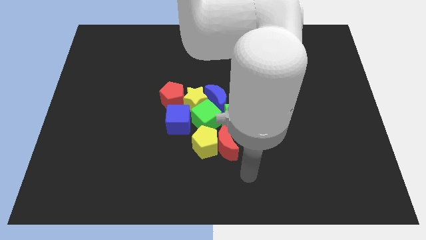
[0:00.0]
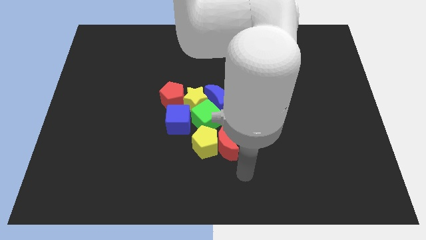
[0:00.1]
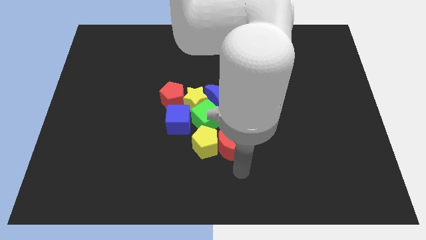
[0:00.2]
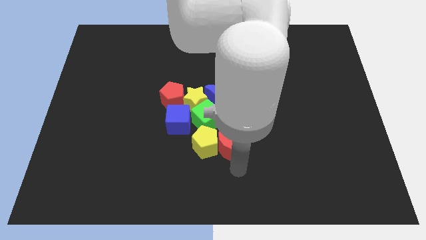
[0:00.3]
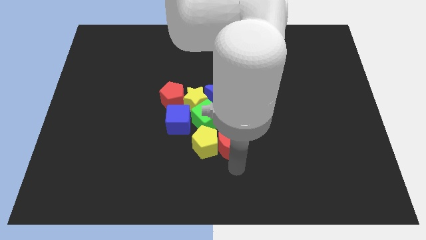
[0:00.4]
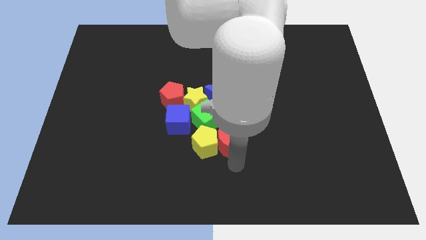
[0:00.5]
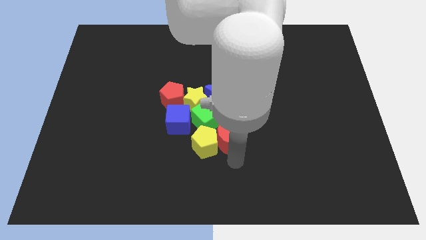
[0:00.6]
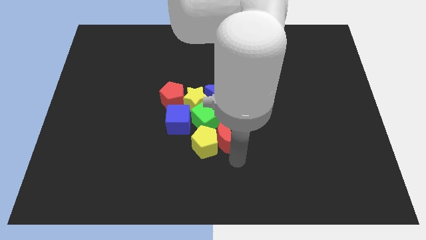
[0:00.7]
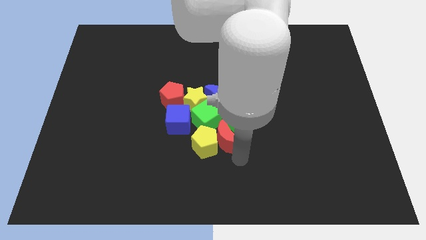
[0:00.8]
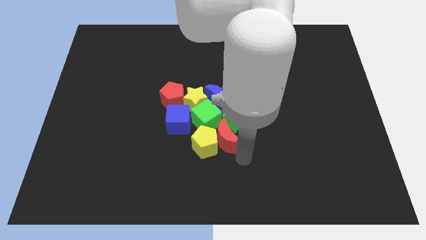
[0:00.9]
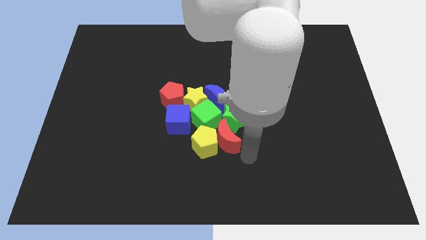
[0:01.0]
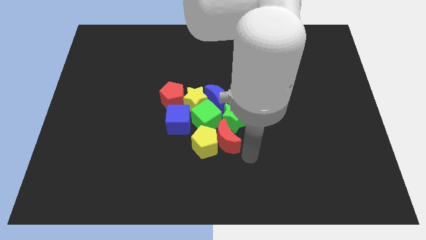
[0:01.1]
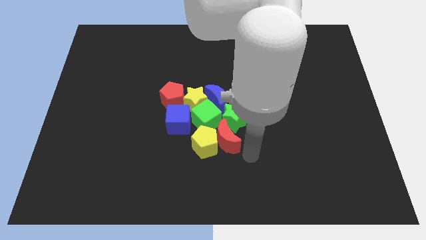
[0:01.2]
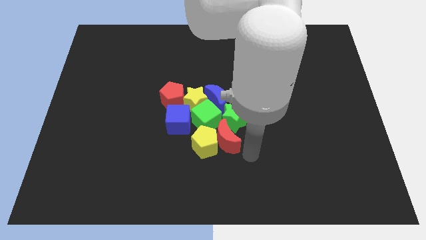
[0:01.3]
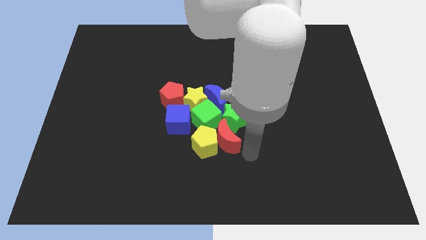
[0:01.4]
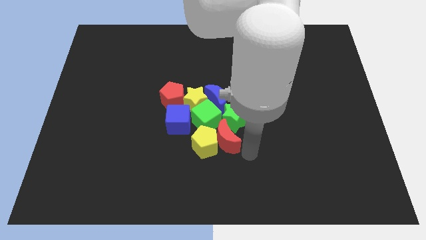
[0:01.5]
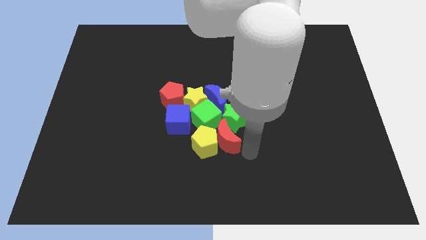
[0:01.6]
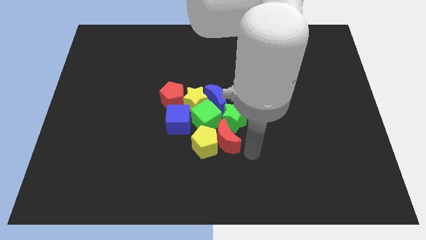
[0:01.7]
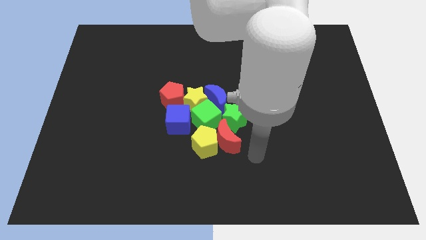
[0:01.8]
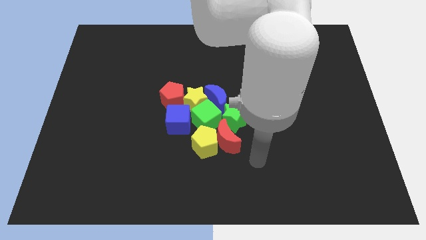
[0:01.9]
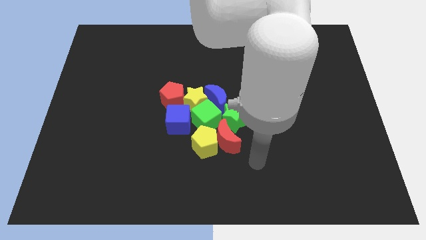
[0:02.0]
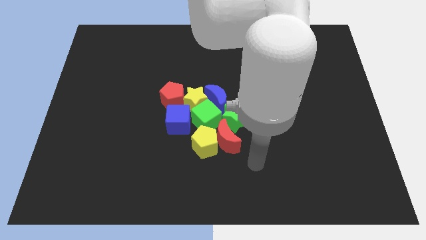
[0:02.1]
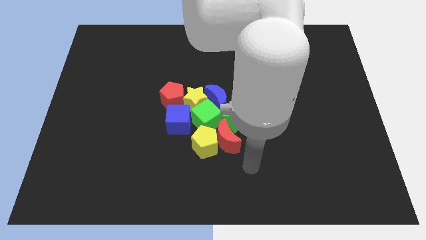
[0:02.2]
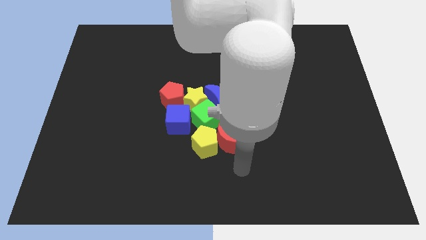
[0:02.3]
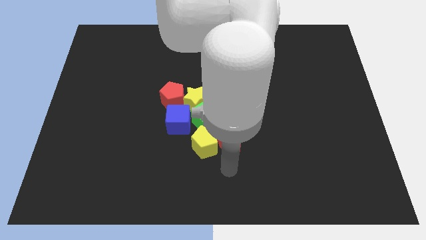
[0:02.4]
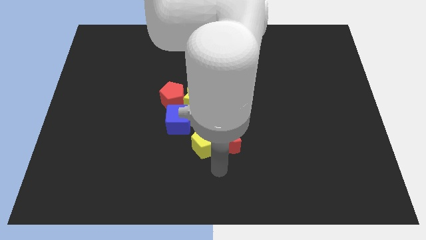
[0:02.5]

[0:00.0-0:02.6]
slightly push the red crescent towards the green blocks

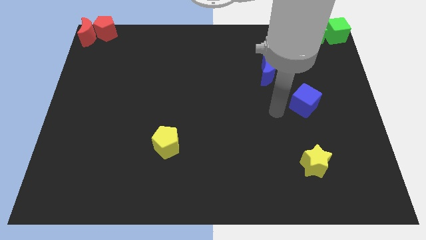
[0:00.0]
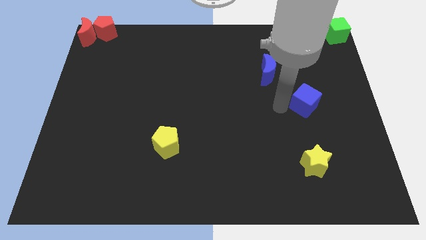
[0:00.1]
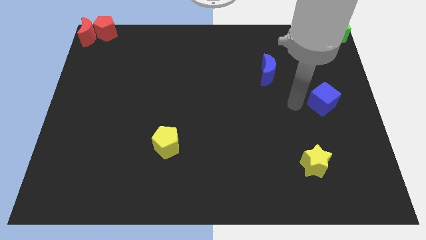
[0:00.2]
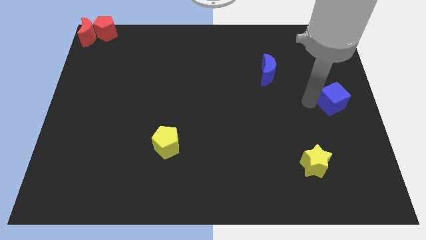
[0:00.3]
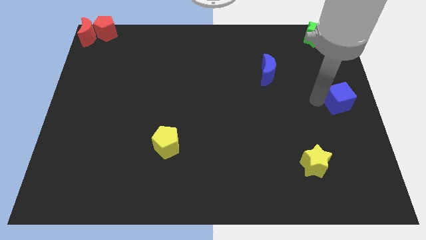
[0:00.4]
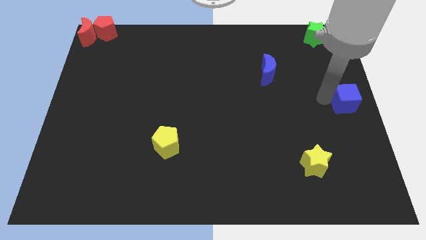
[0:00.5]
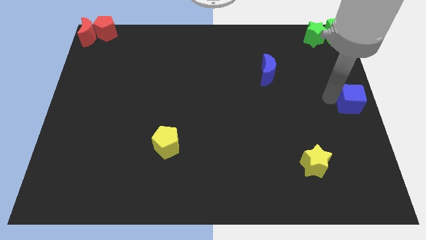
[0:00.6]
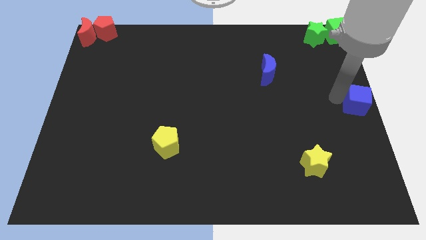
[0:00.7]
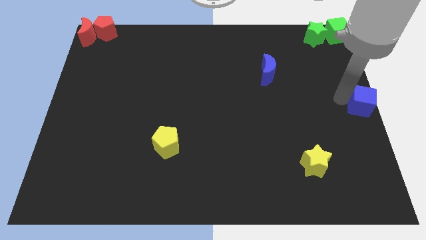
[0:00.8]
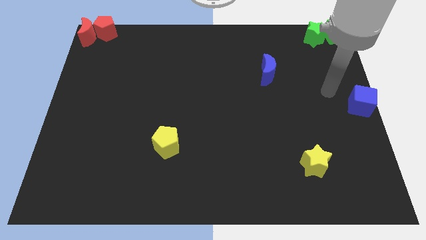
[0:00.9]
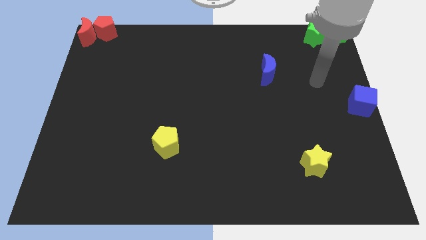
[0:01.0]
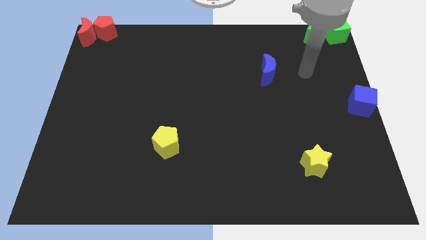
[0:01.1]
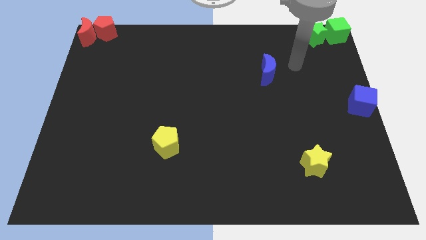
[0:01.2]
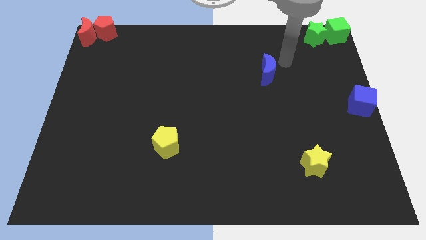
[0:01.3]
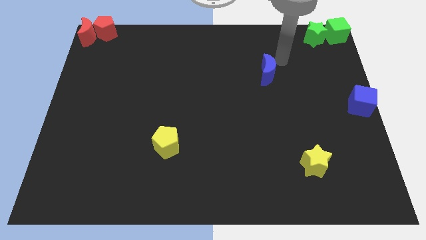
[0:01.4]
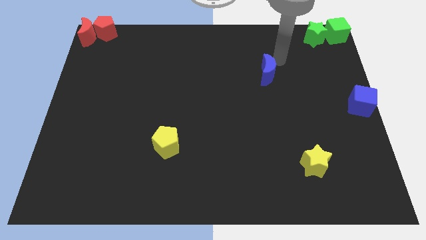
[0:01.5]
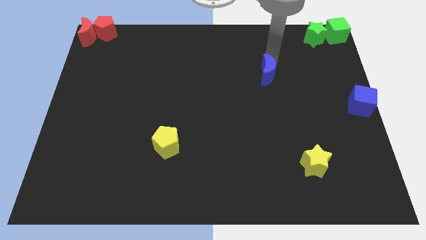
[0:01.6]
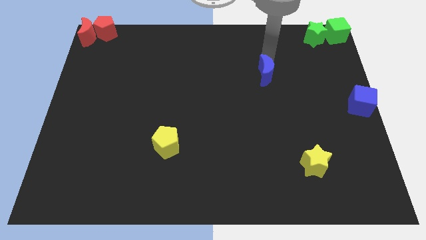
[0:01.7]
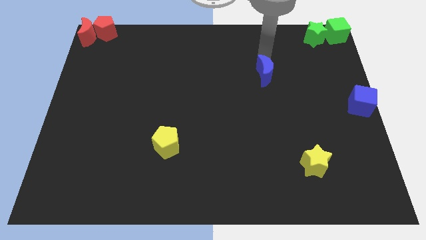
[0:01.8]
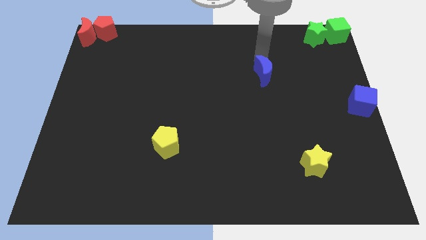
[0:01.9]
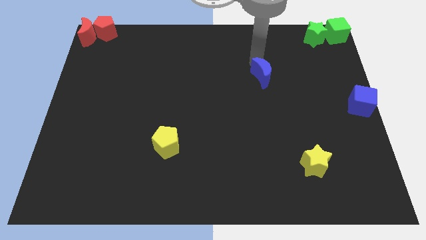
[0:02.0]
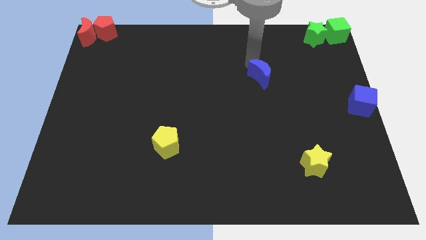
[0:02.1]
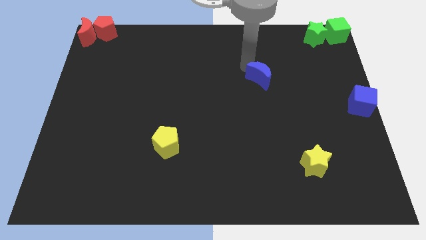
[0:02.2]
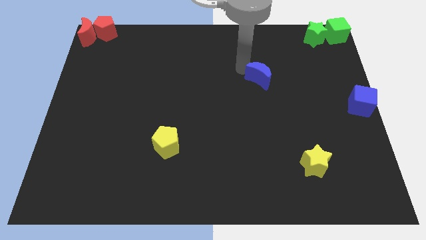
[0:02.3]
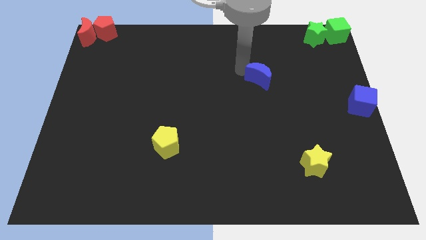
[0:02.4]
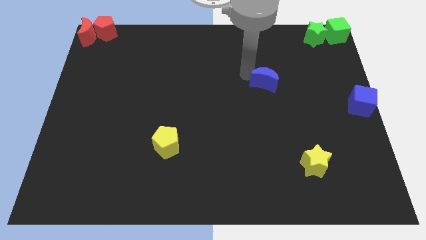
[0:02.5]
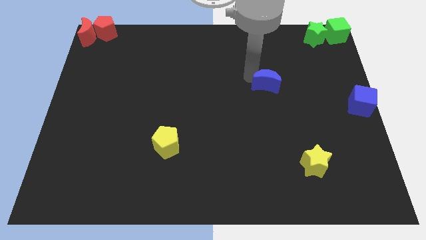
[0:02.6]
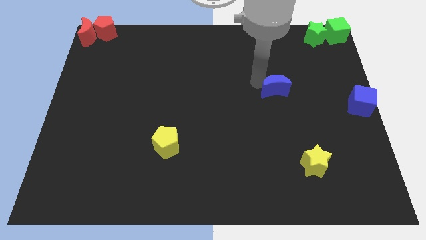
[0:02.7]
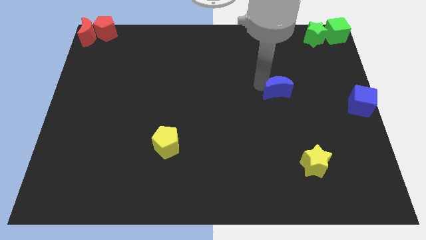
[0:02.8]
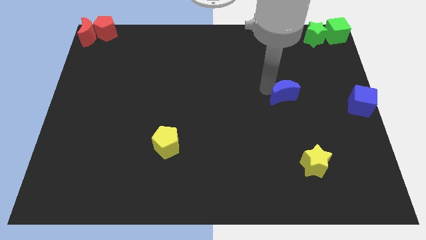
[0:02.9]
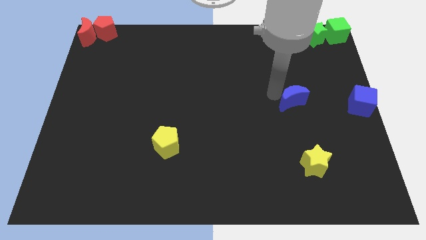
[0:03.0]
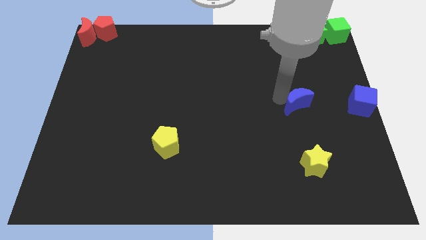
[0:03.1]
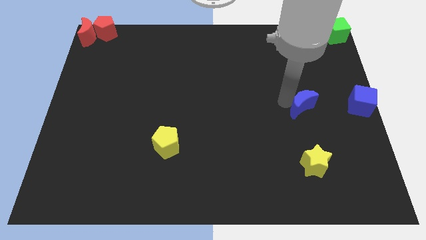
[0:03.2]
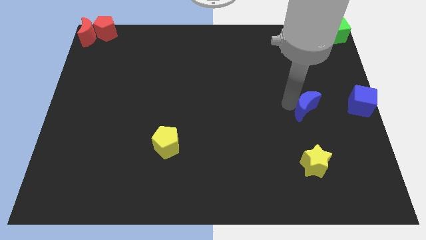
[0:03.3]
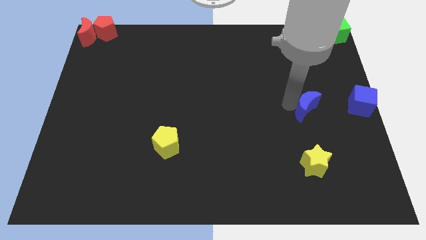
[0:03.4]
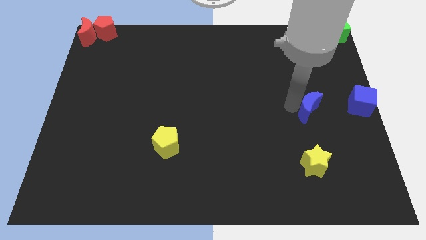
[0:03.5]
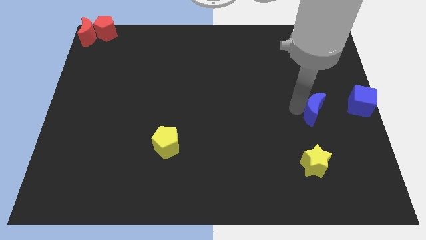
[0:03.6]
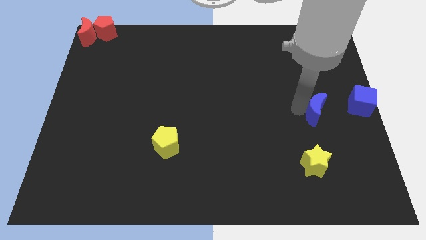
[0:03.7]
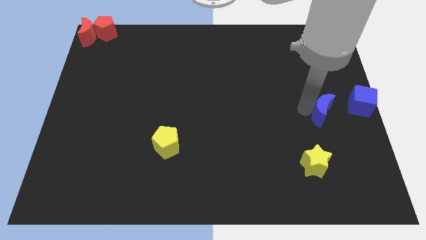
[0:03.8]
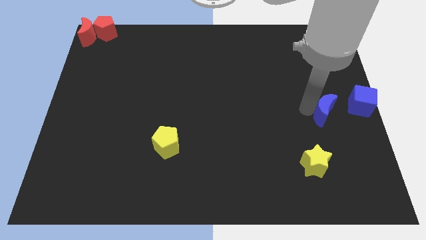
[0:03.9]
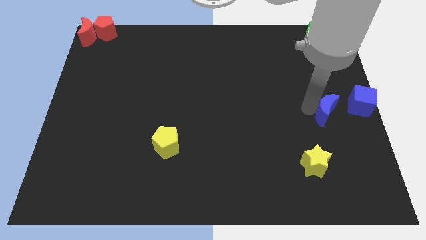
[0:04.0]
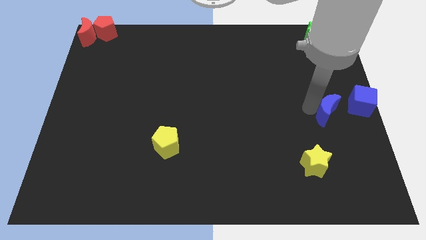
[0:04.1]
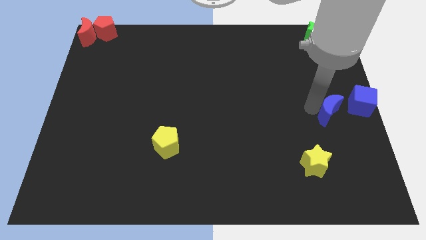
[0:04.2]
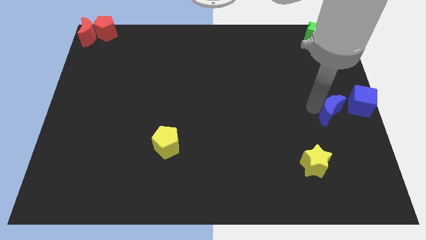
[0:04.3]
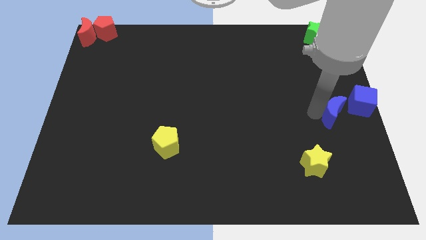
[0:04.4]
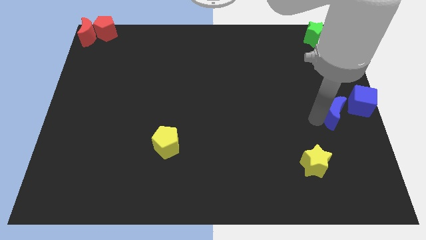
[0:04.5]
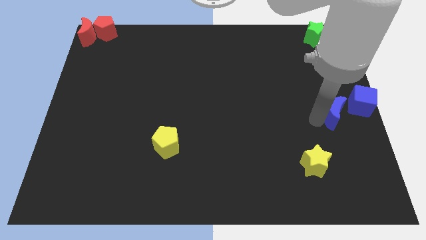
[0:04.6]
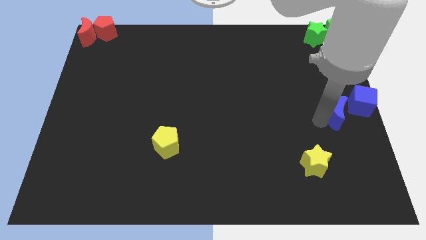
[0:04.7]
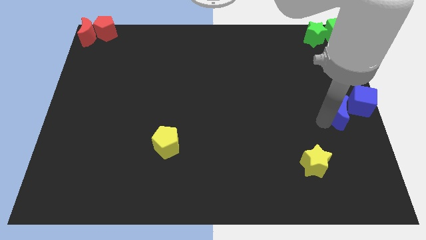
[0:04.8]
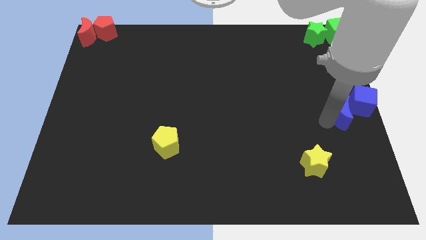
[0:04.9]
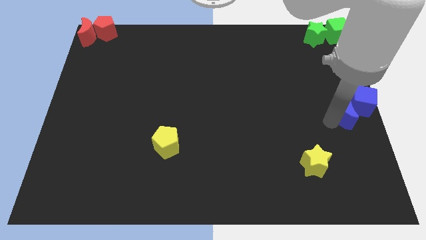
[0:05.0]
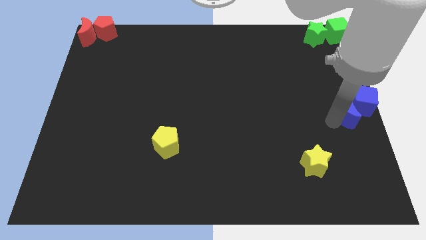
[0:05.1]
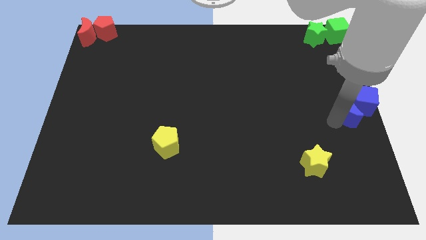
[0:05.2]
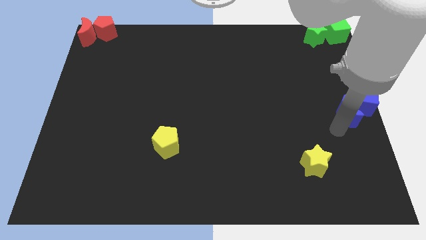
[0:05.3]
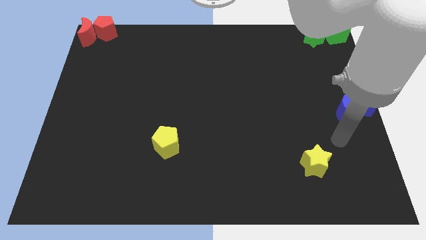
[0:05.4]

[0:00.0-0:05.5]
place both the blue blocks at the center right side of the board

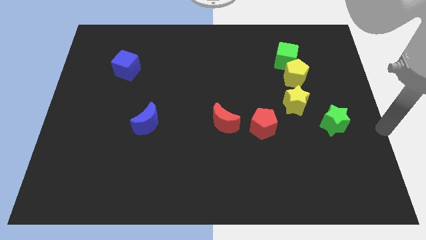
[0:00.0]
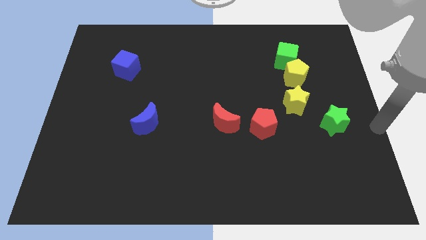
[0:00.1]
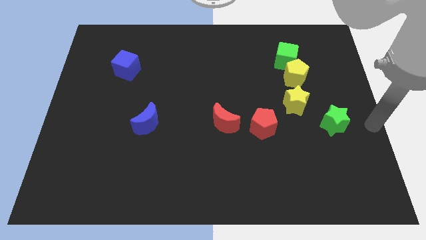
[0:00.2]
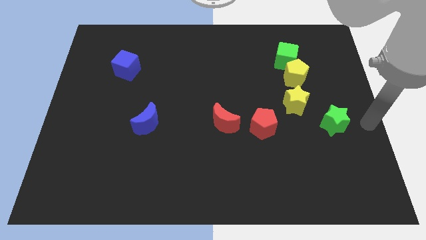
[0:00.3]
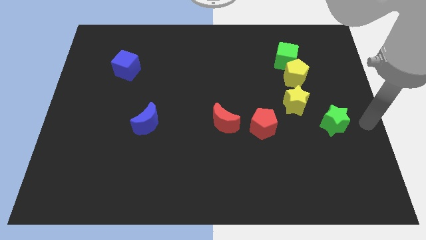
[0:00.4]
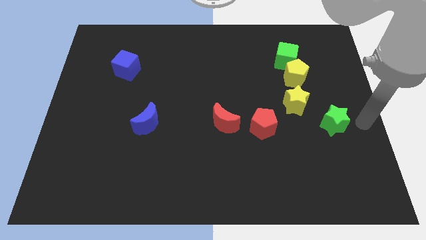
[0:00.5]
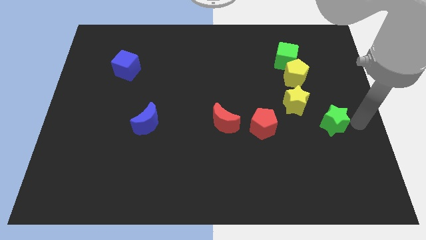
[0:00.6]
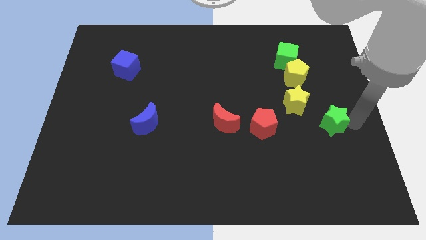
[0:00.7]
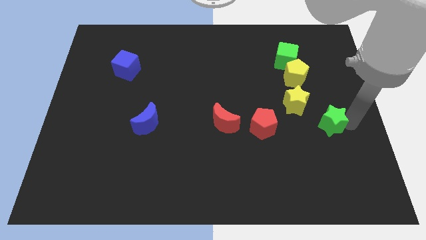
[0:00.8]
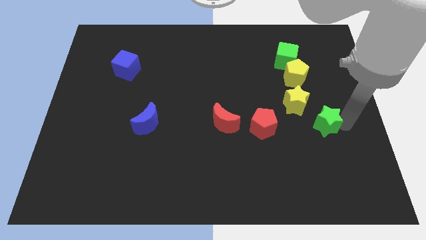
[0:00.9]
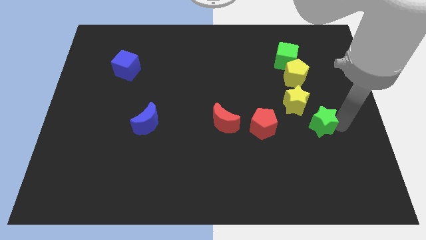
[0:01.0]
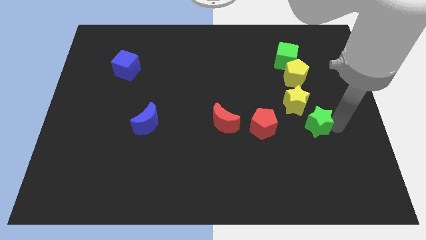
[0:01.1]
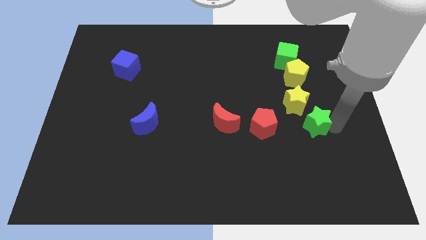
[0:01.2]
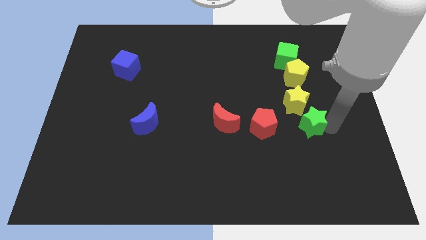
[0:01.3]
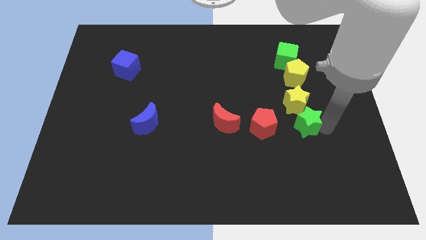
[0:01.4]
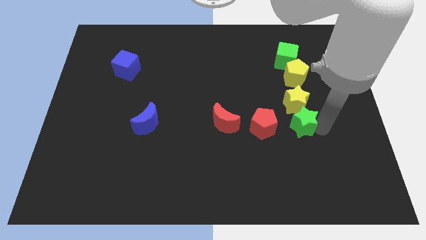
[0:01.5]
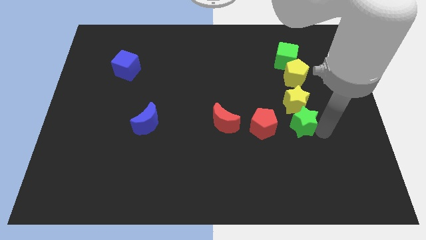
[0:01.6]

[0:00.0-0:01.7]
push the green star towards the red pentagon
